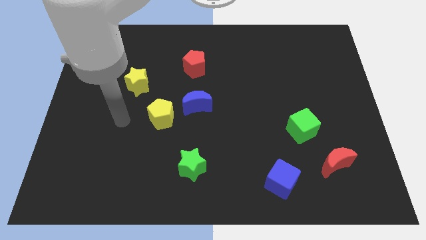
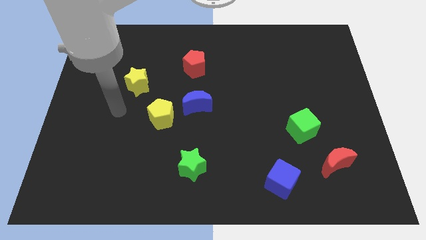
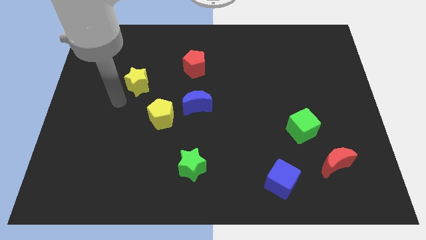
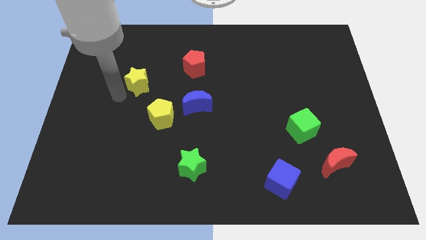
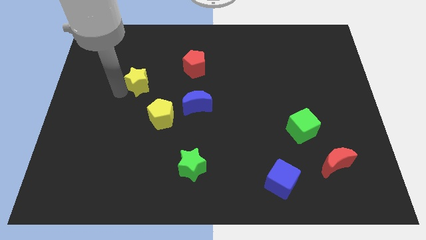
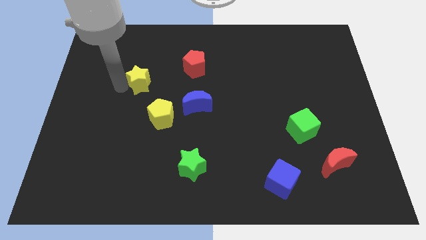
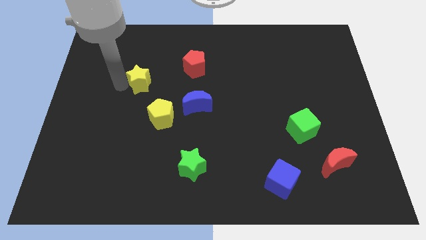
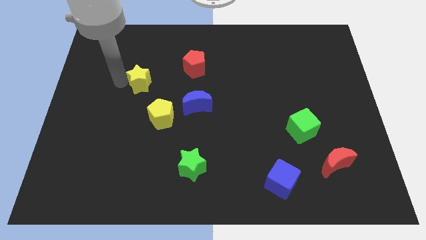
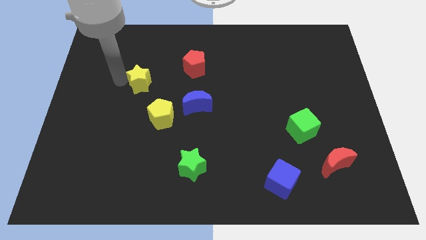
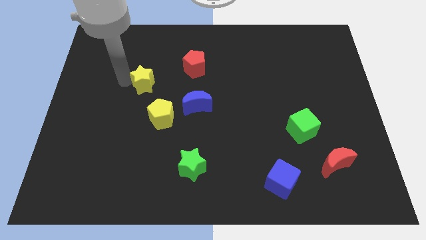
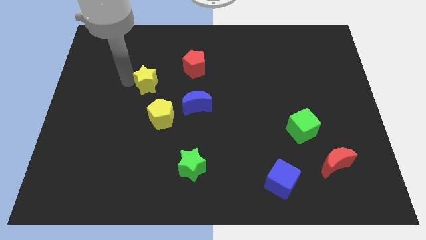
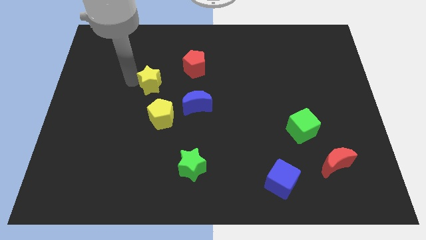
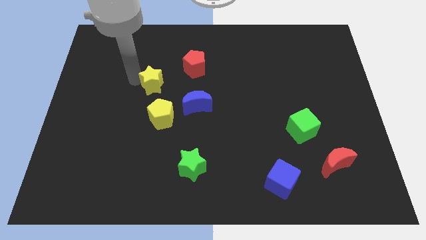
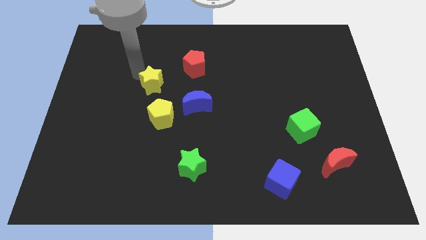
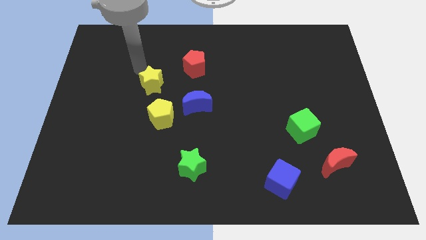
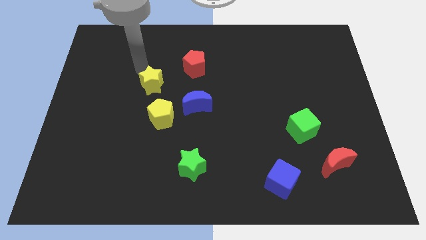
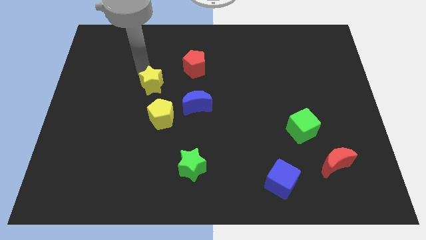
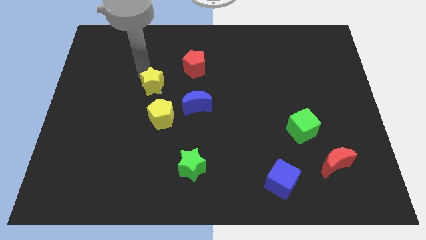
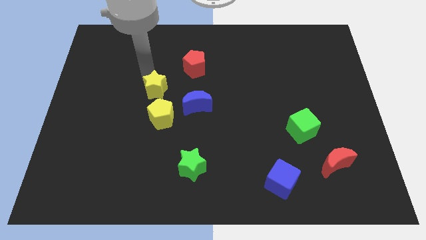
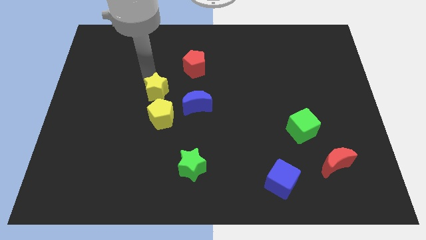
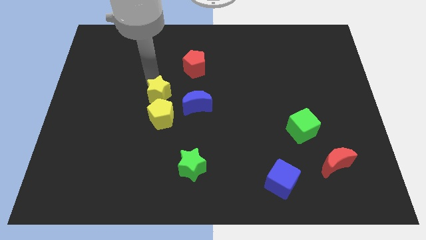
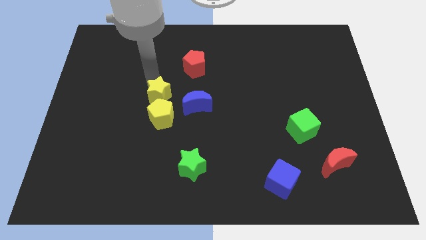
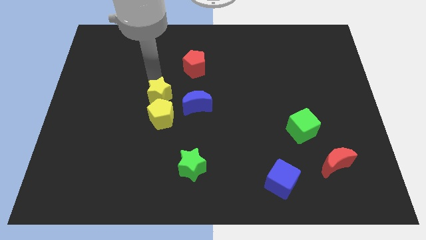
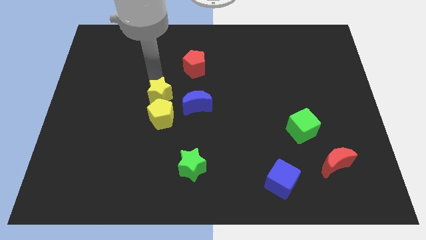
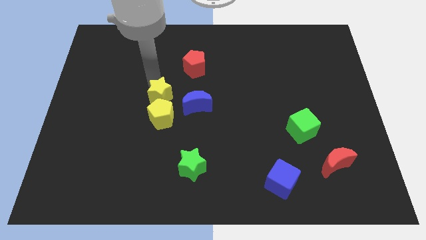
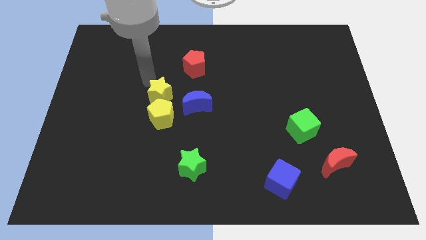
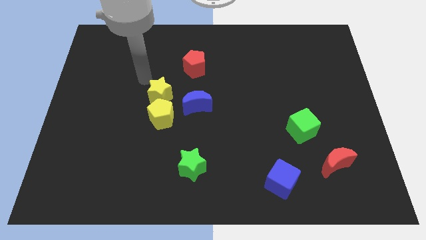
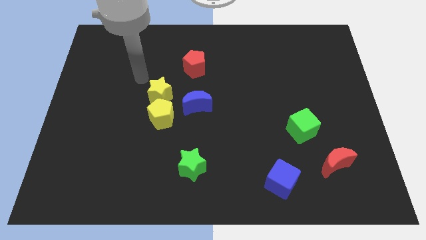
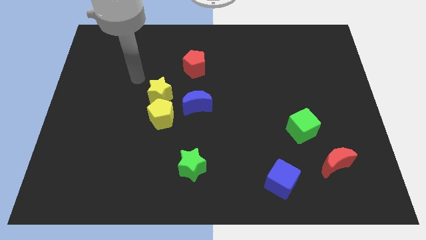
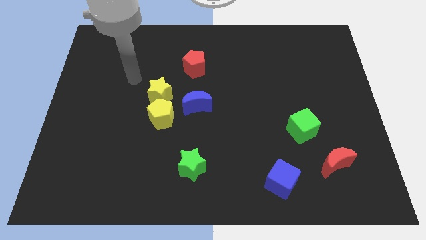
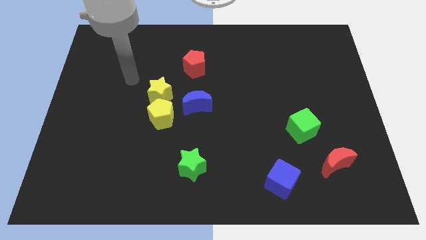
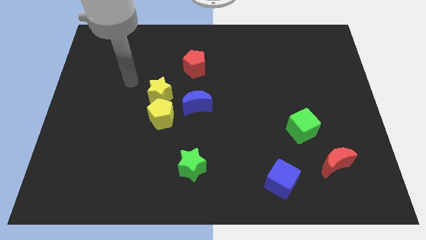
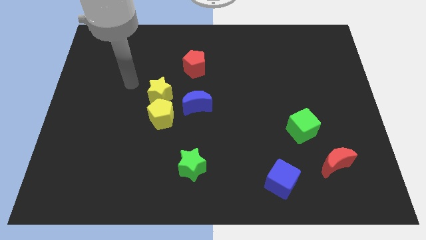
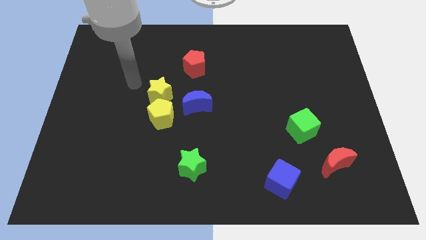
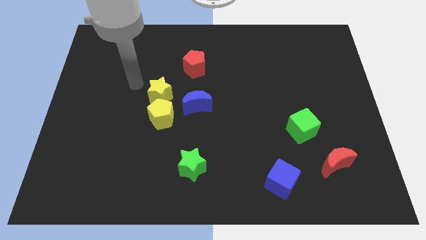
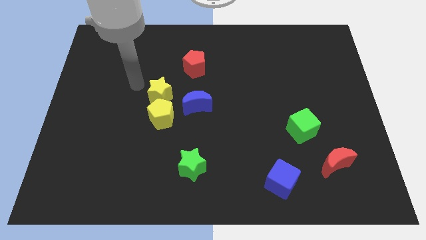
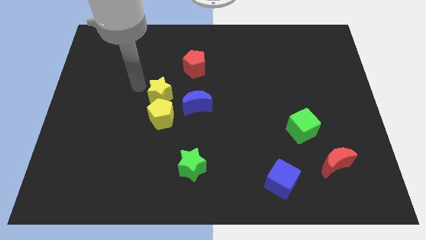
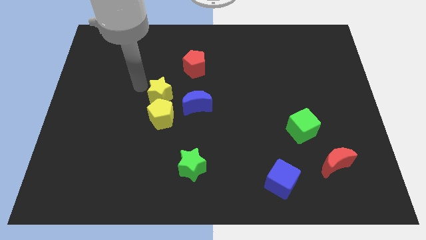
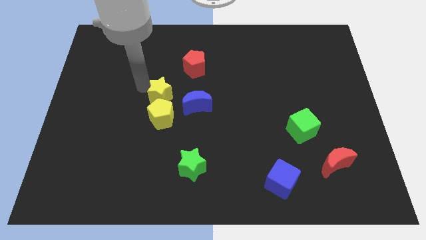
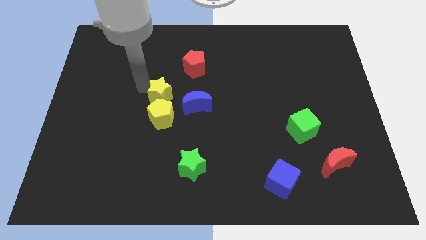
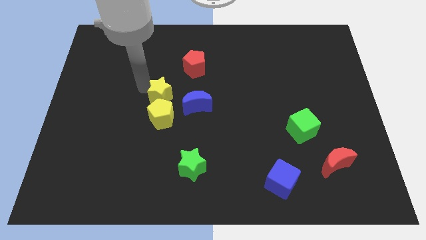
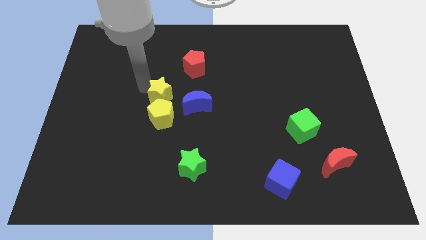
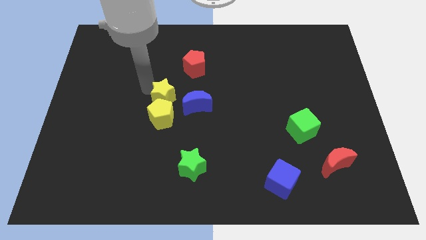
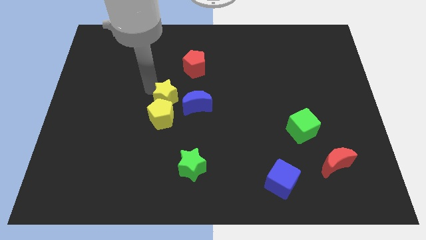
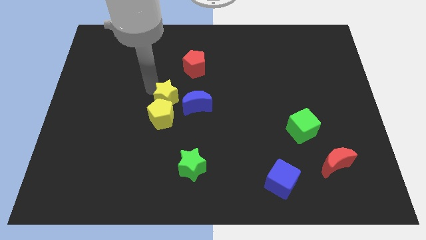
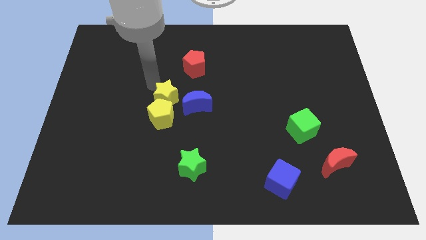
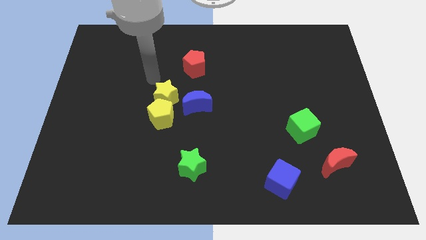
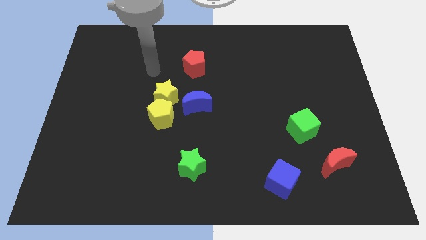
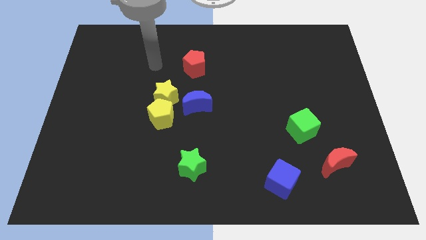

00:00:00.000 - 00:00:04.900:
place the yellow star on top of the yellow pentagon

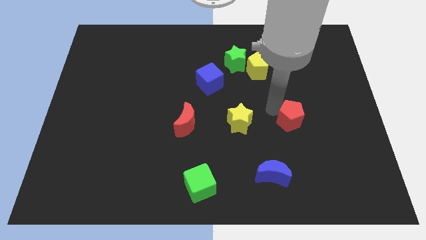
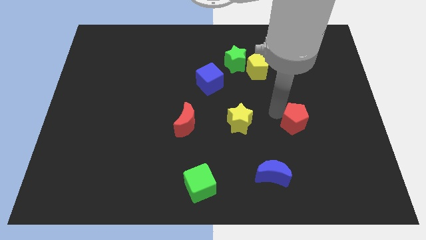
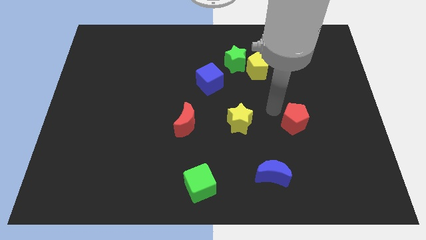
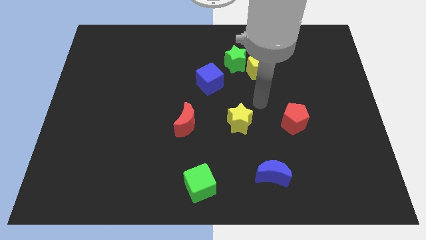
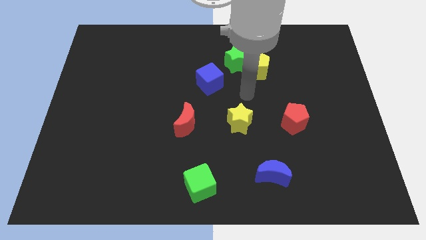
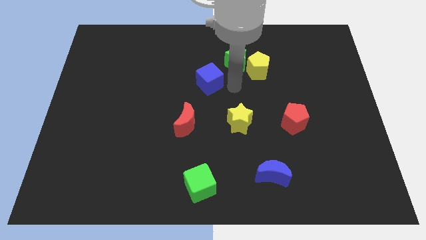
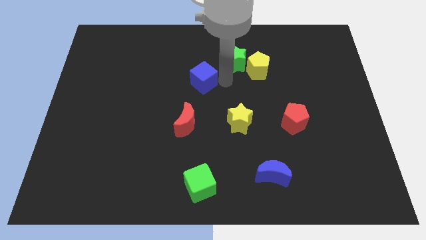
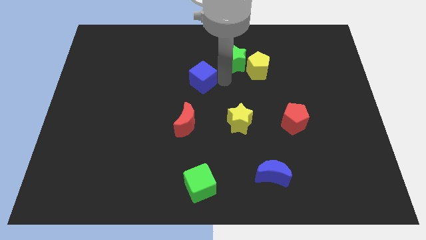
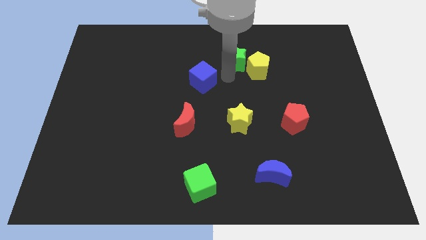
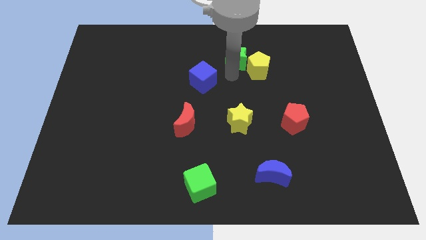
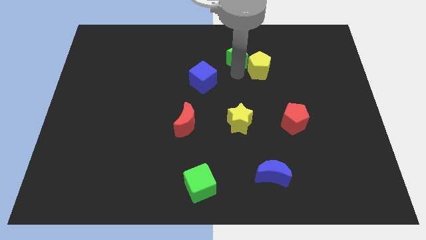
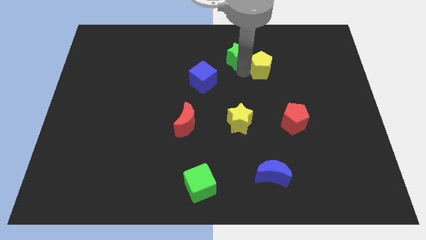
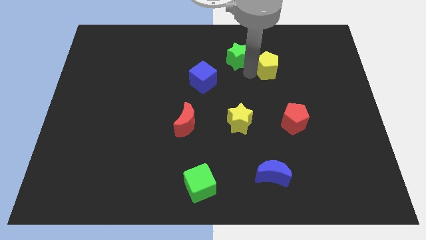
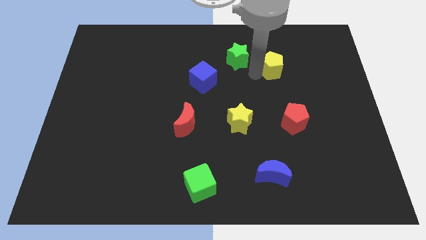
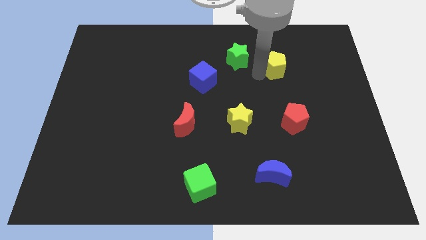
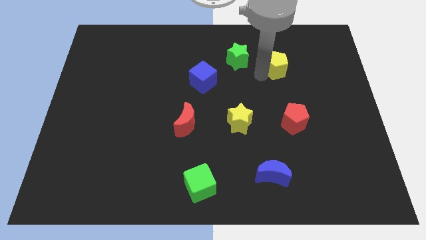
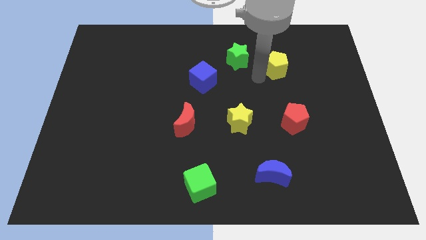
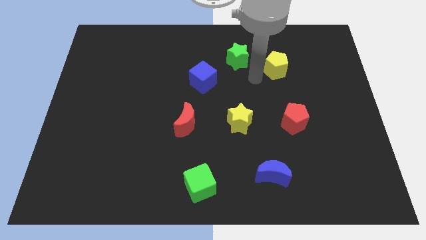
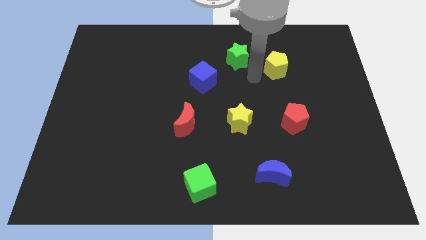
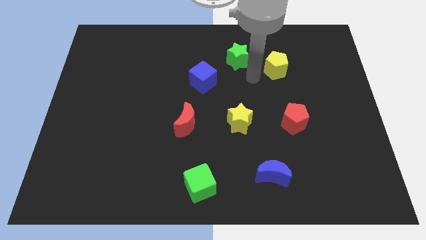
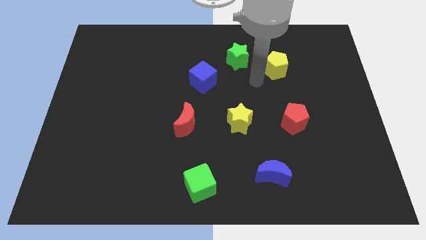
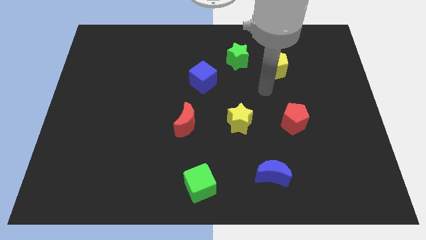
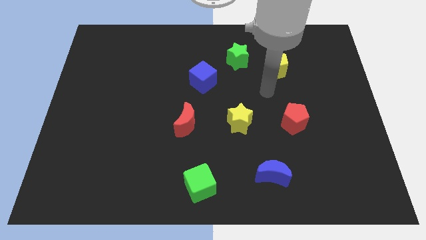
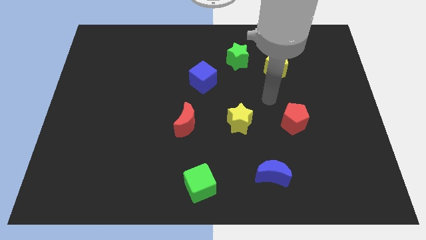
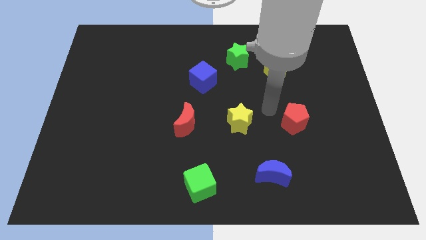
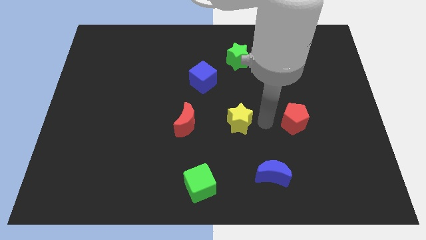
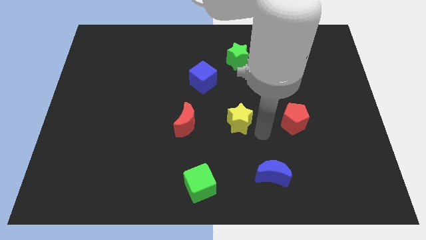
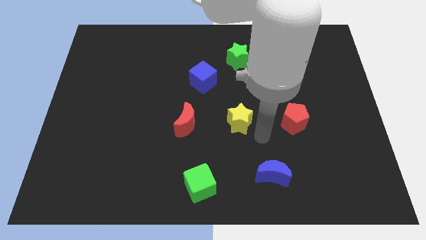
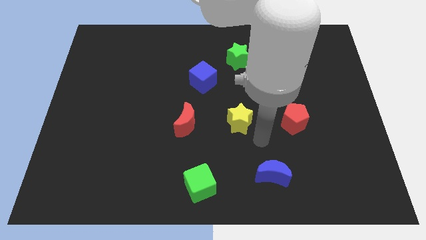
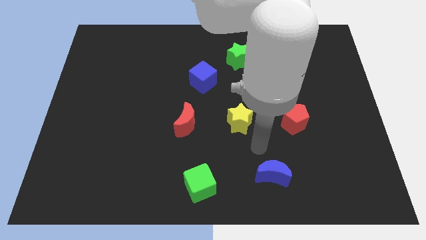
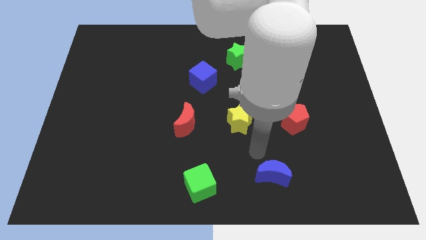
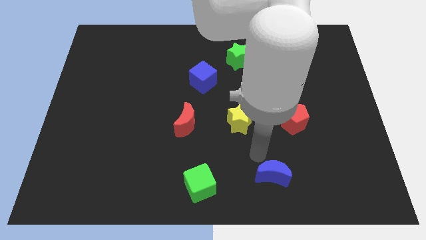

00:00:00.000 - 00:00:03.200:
move the group of blocks away from each other

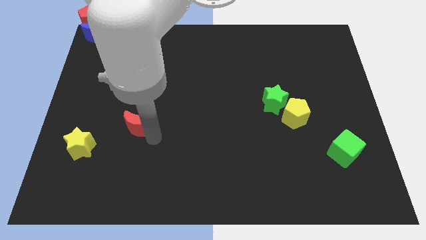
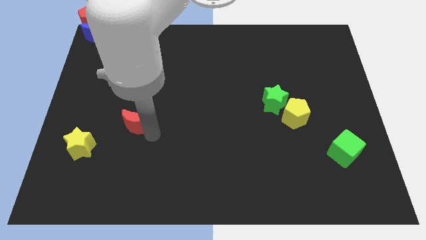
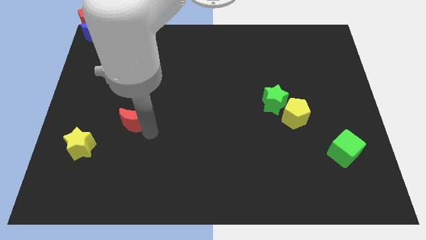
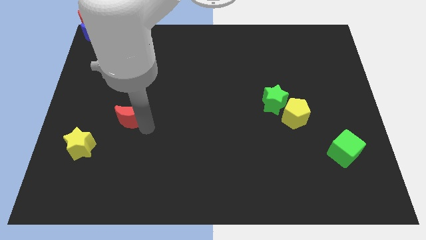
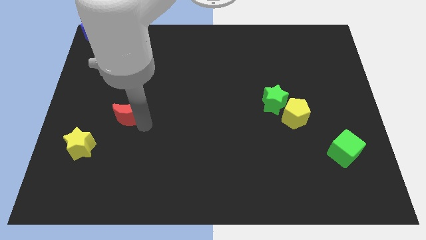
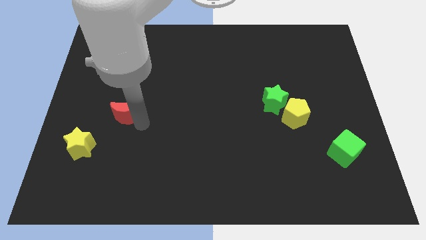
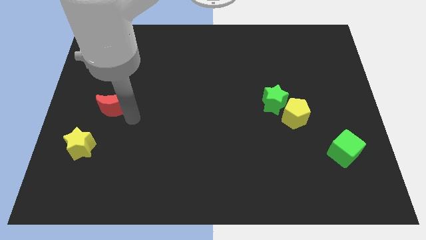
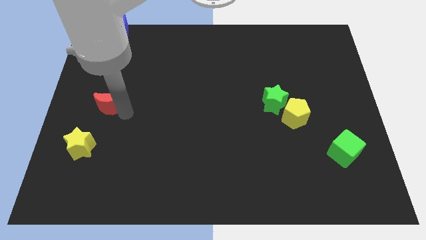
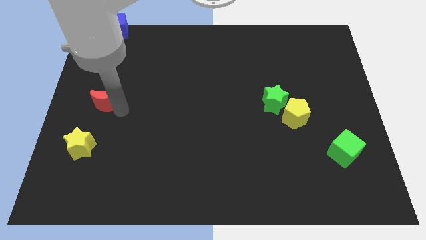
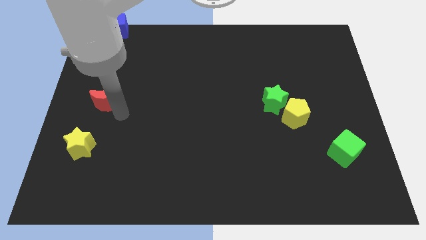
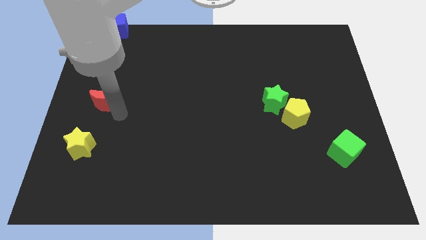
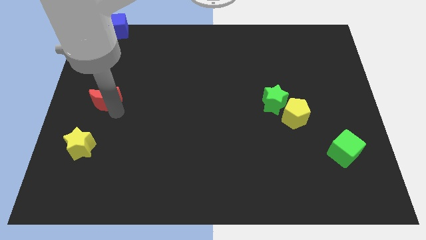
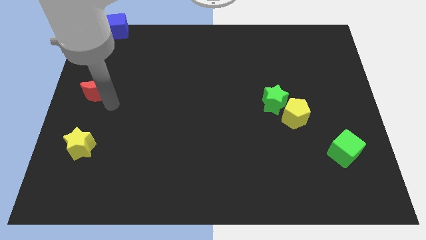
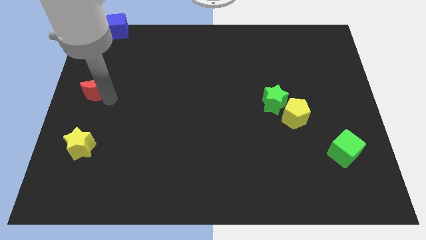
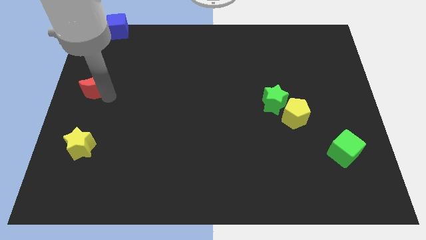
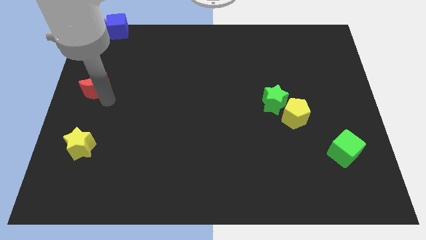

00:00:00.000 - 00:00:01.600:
move the red moon vertically to the top side of the yellow star
